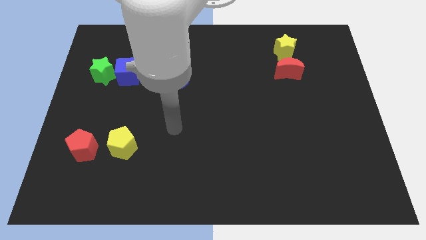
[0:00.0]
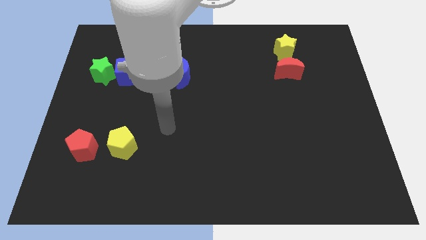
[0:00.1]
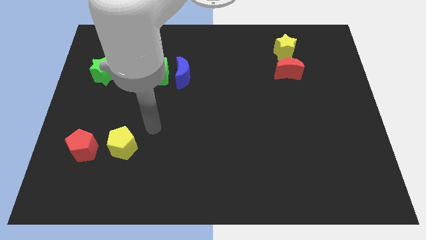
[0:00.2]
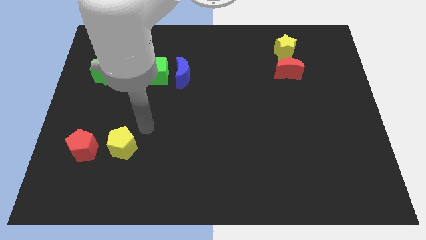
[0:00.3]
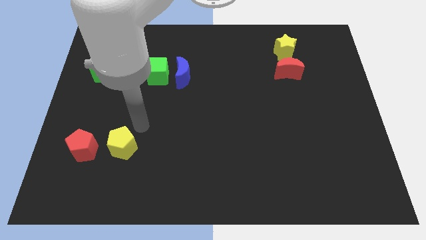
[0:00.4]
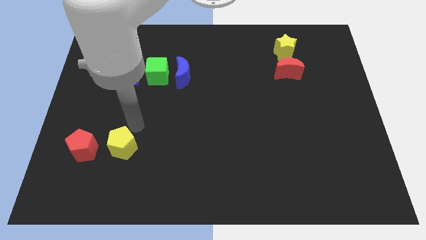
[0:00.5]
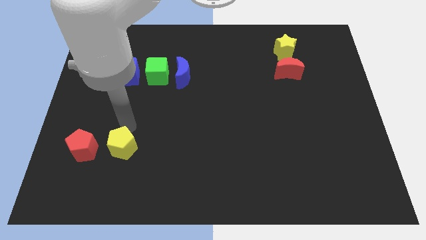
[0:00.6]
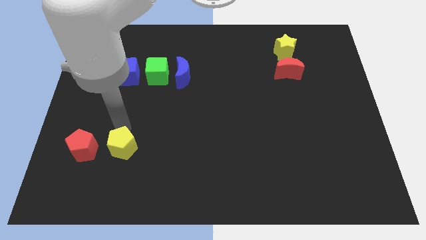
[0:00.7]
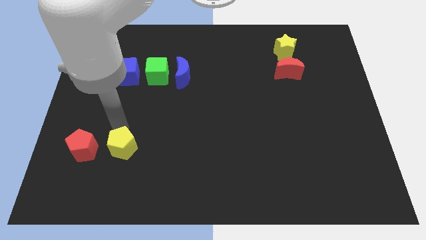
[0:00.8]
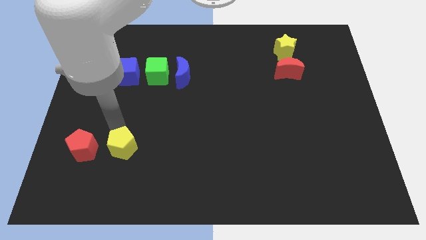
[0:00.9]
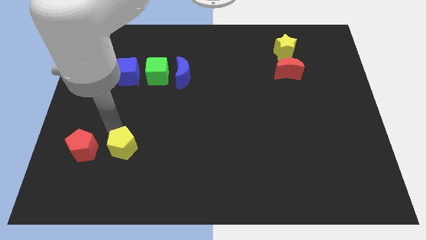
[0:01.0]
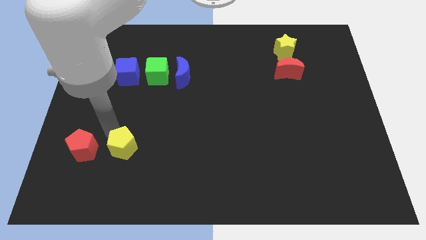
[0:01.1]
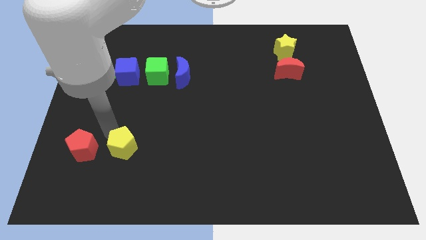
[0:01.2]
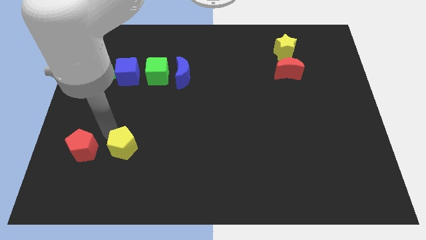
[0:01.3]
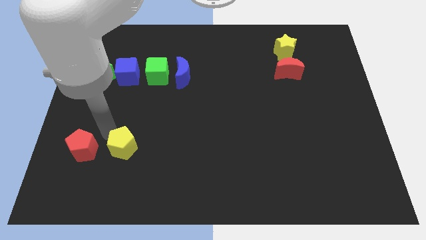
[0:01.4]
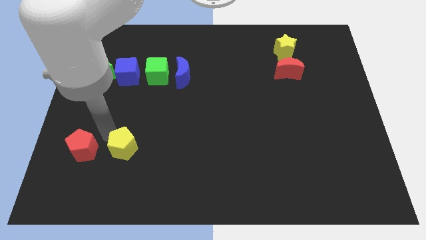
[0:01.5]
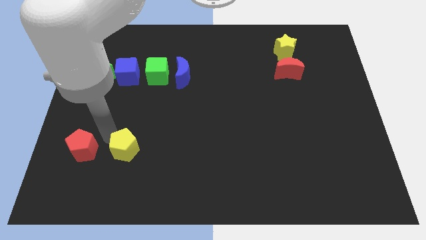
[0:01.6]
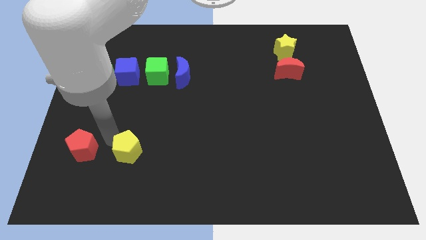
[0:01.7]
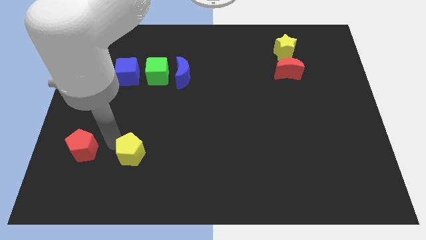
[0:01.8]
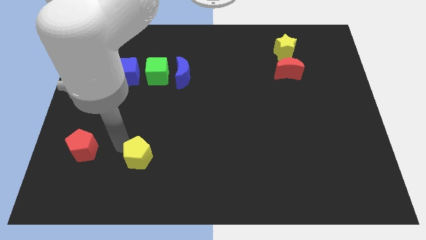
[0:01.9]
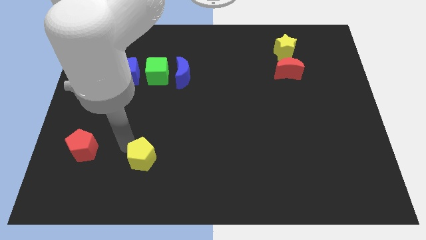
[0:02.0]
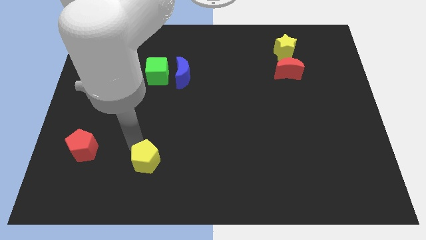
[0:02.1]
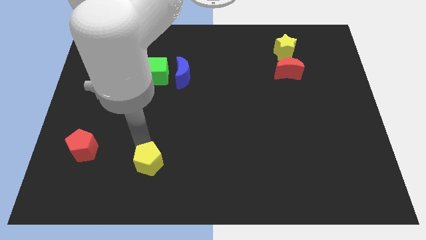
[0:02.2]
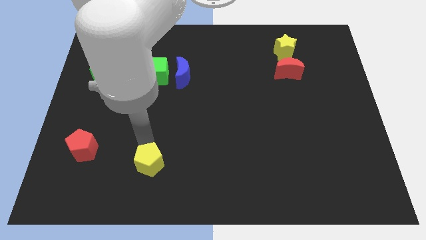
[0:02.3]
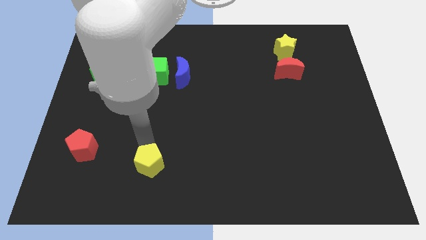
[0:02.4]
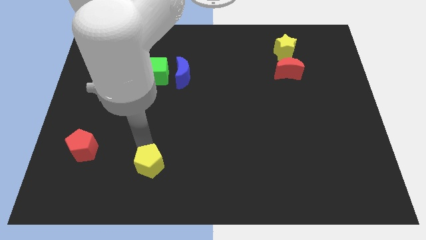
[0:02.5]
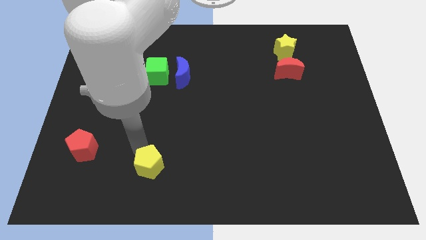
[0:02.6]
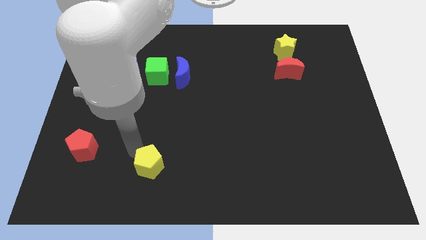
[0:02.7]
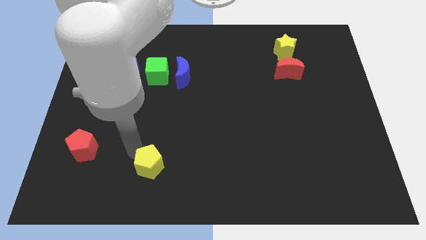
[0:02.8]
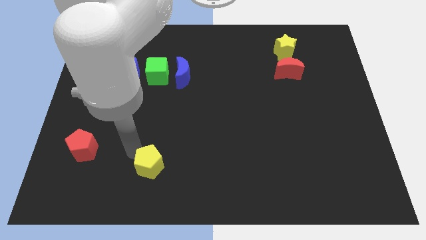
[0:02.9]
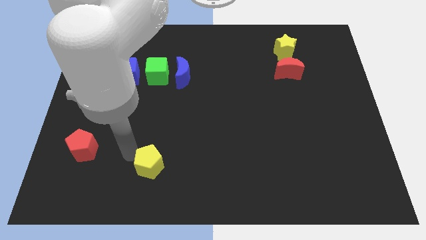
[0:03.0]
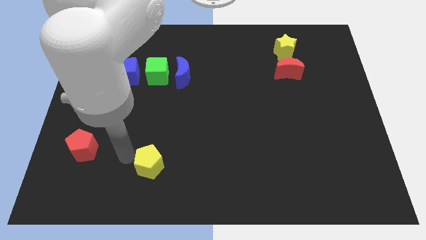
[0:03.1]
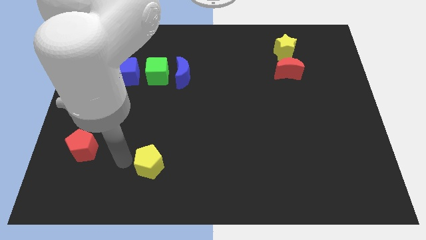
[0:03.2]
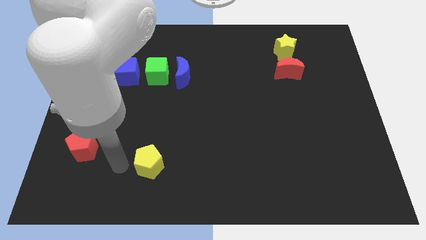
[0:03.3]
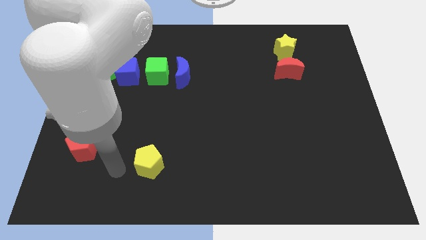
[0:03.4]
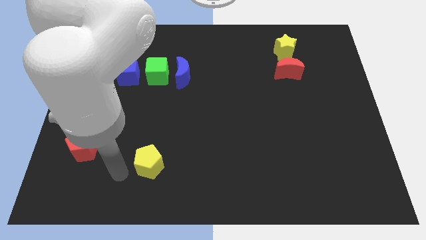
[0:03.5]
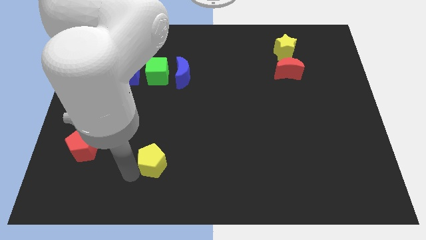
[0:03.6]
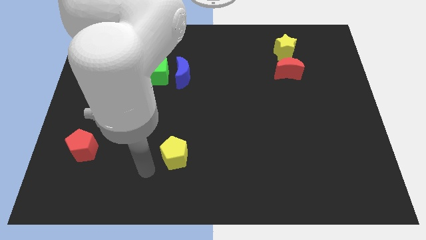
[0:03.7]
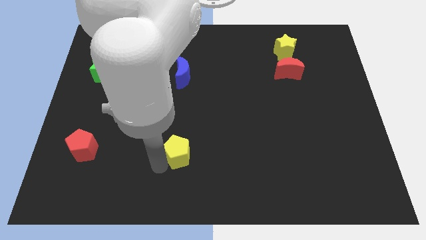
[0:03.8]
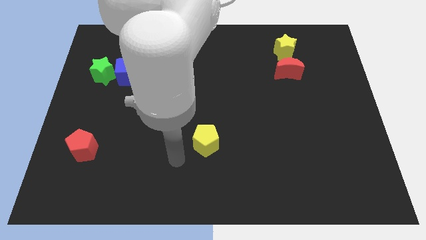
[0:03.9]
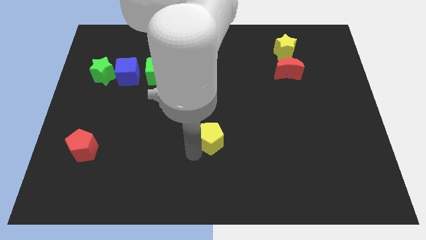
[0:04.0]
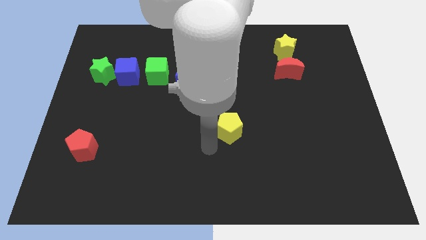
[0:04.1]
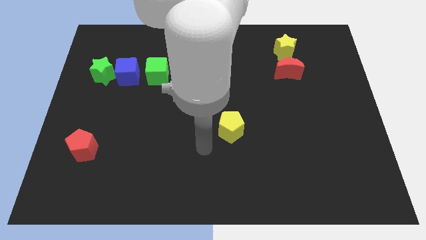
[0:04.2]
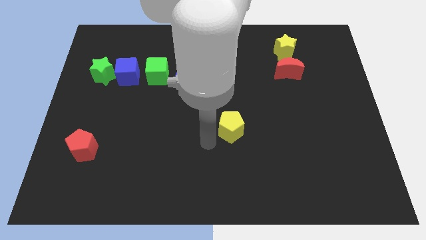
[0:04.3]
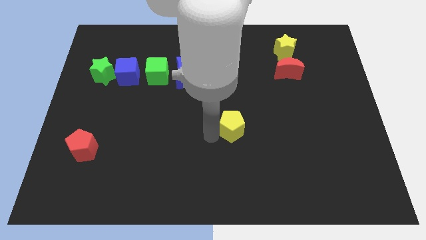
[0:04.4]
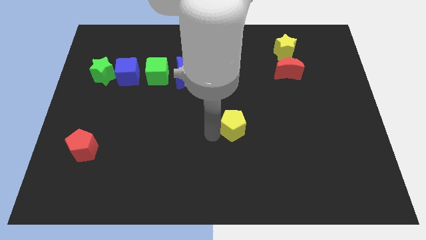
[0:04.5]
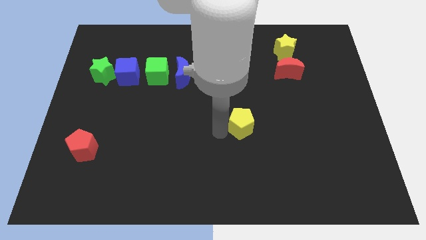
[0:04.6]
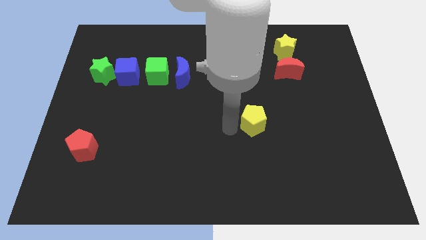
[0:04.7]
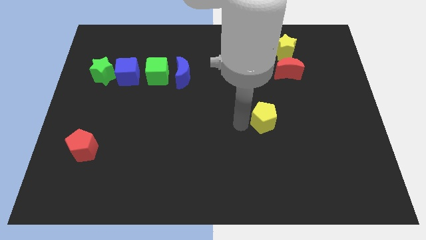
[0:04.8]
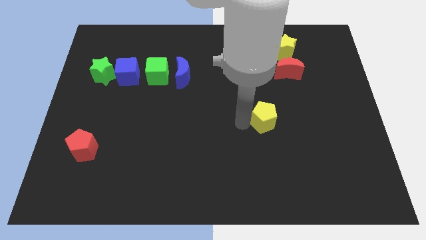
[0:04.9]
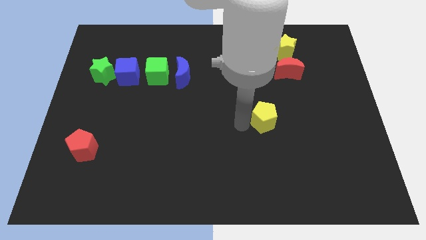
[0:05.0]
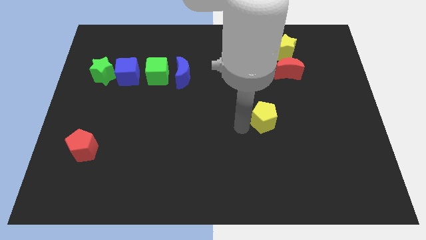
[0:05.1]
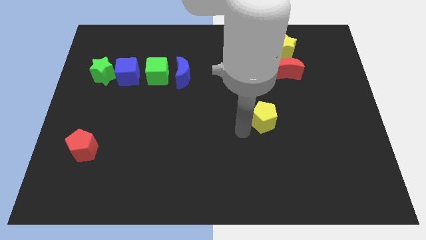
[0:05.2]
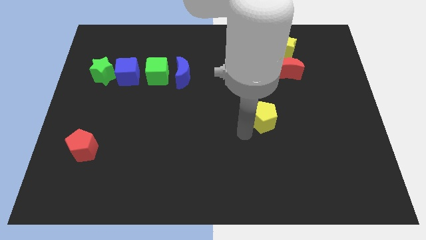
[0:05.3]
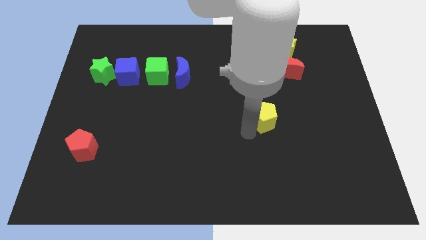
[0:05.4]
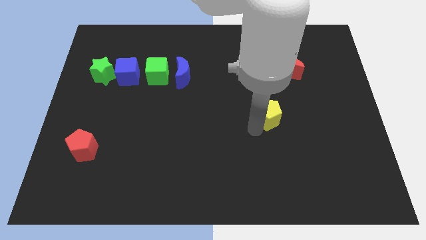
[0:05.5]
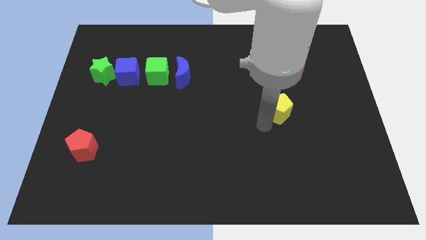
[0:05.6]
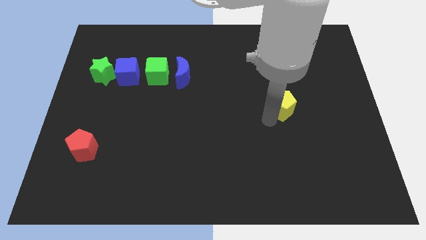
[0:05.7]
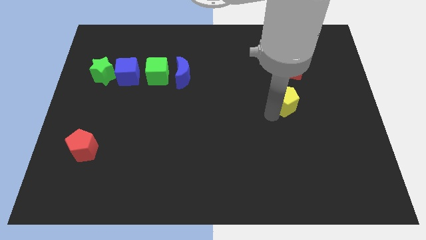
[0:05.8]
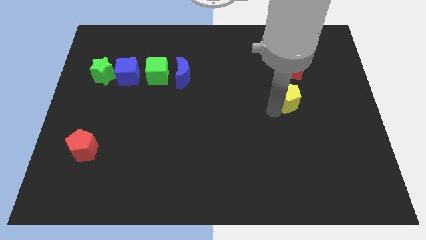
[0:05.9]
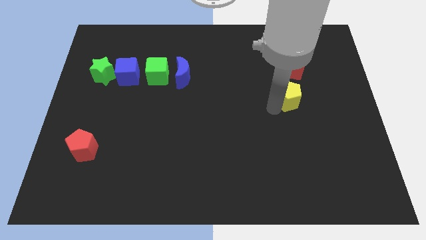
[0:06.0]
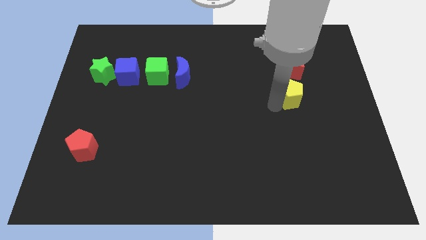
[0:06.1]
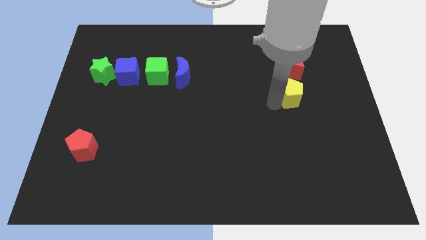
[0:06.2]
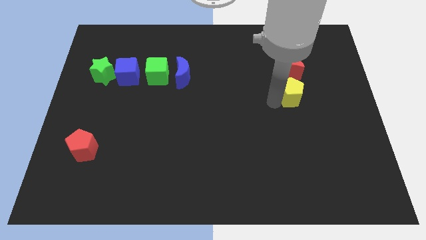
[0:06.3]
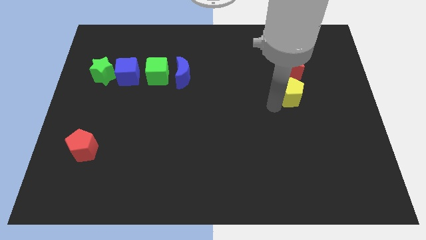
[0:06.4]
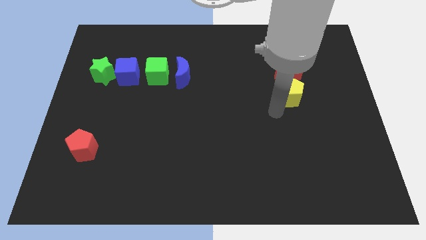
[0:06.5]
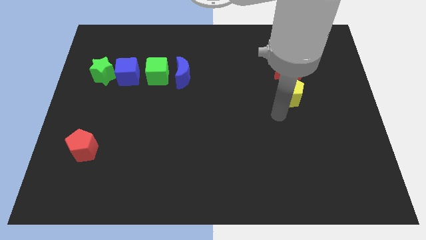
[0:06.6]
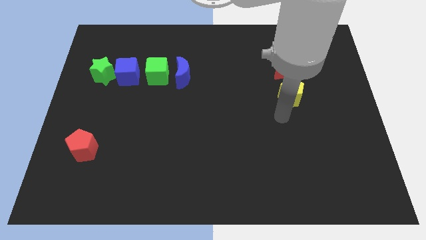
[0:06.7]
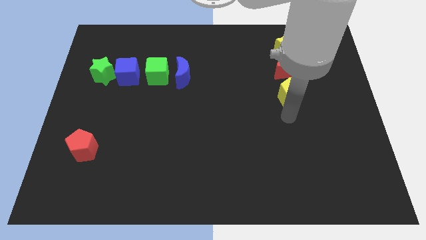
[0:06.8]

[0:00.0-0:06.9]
add the yellow pentagon to the vertical line of the yellow star and the red moon

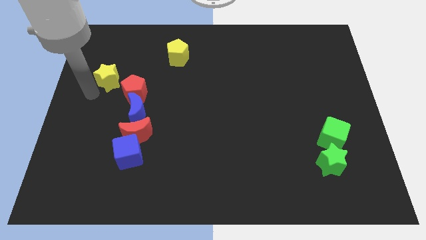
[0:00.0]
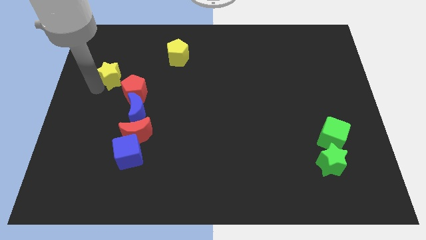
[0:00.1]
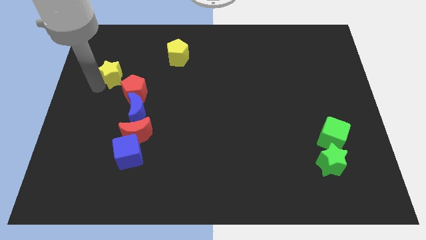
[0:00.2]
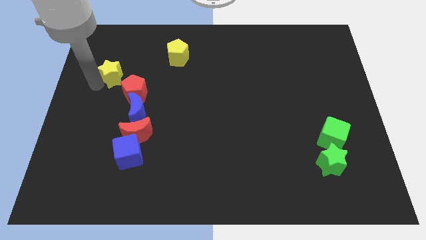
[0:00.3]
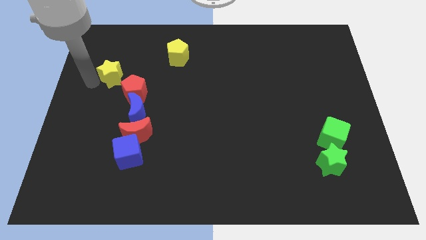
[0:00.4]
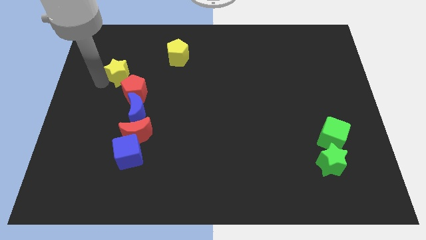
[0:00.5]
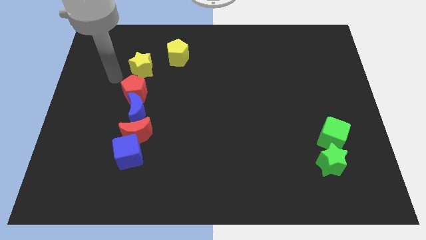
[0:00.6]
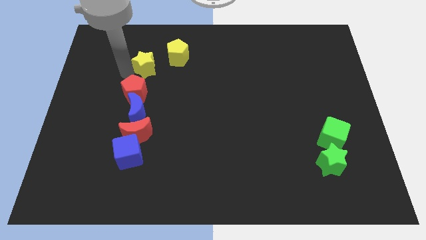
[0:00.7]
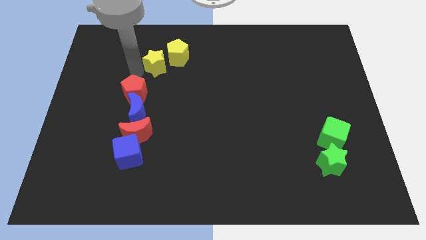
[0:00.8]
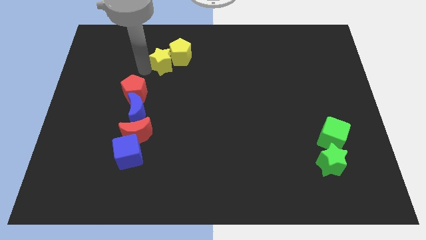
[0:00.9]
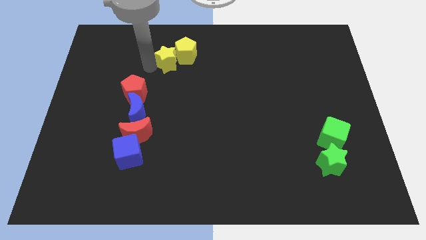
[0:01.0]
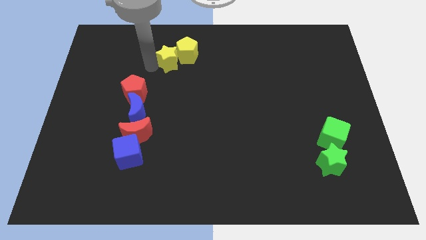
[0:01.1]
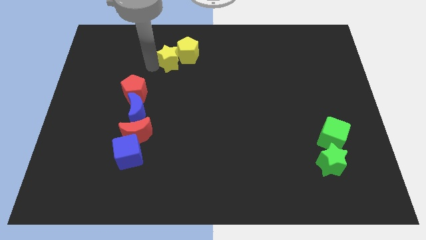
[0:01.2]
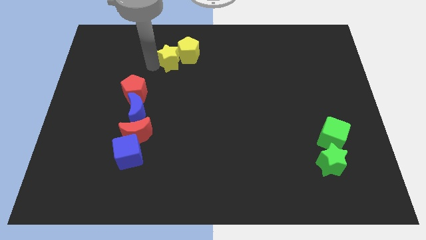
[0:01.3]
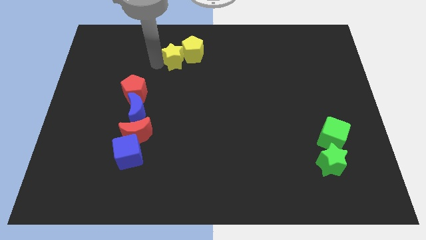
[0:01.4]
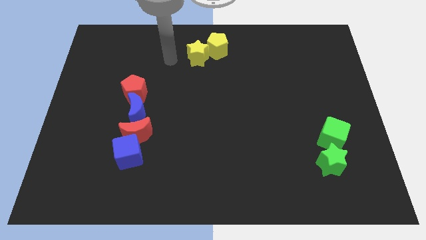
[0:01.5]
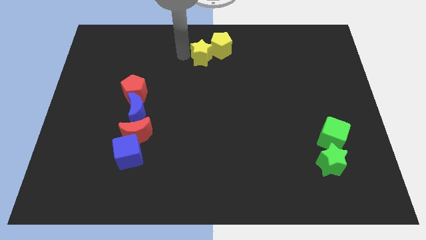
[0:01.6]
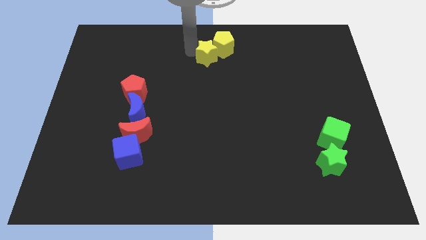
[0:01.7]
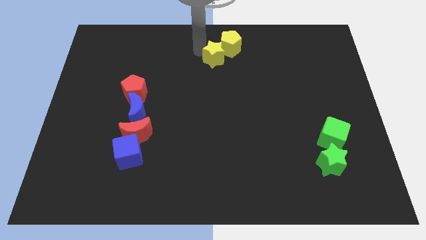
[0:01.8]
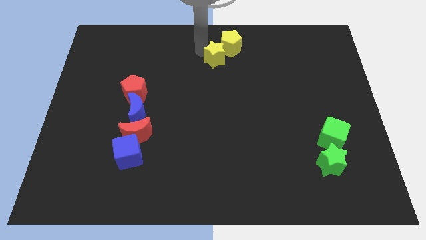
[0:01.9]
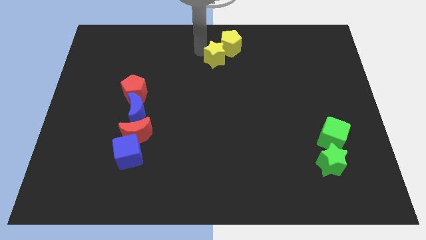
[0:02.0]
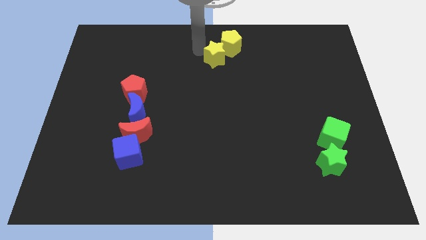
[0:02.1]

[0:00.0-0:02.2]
push the yellow pentagon with the yellow star towards the top right side of the board
